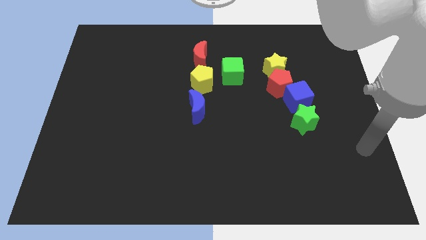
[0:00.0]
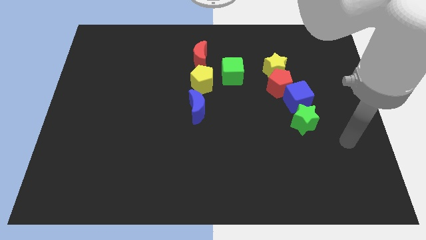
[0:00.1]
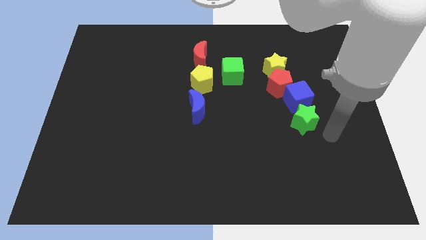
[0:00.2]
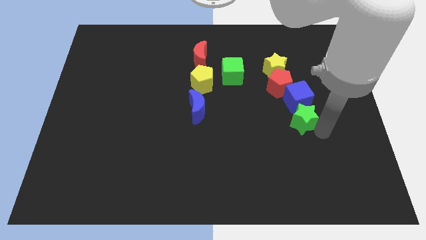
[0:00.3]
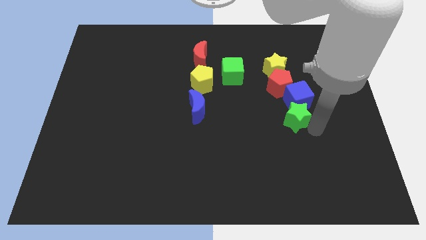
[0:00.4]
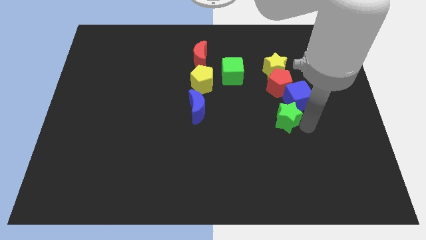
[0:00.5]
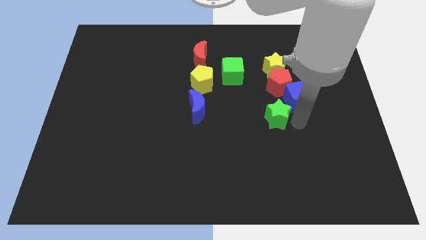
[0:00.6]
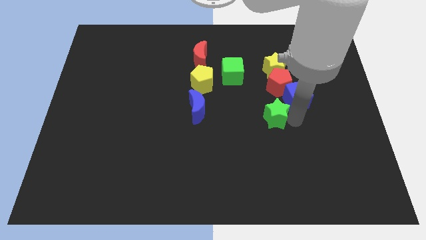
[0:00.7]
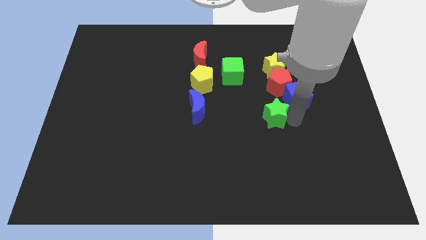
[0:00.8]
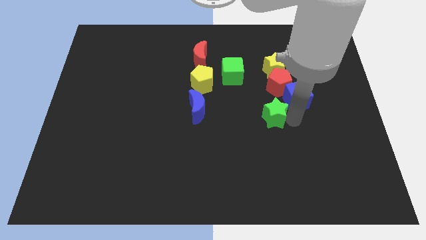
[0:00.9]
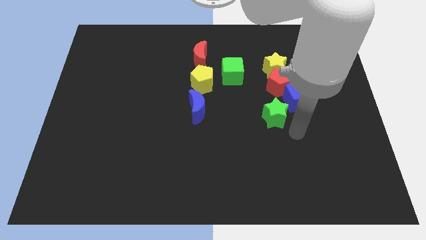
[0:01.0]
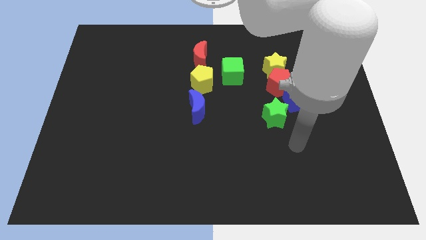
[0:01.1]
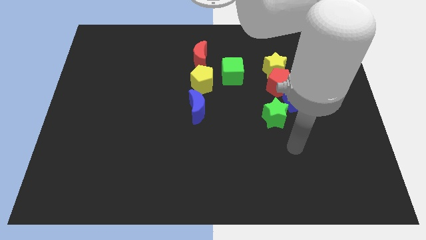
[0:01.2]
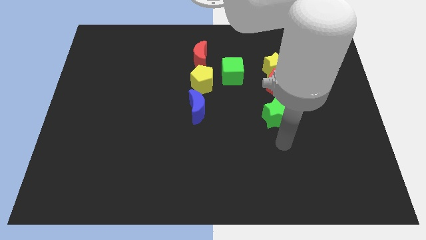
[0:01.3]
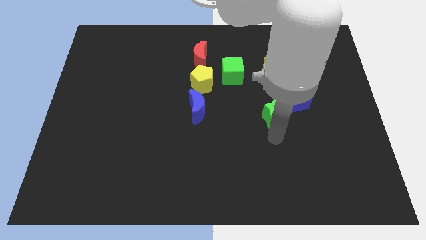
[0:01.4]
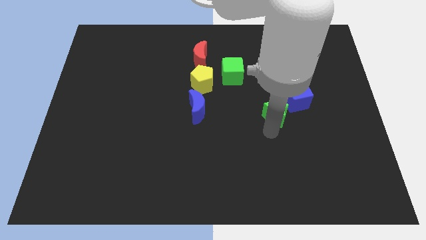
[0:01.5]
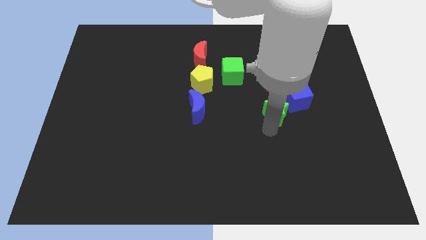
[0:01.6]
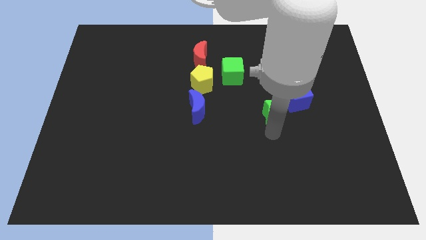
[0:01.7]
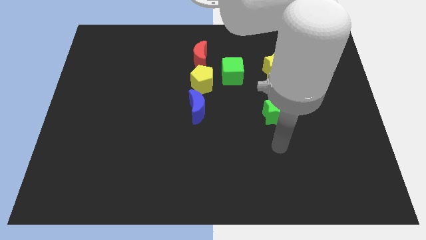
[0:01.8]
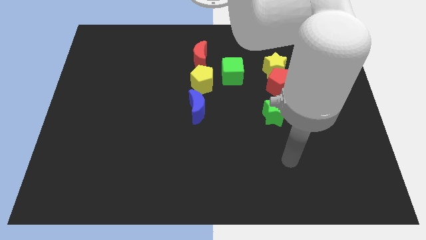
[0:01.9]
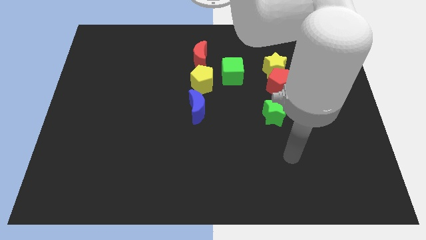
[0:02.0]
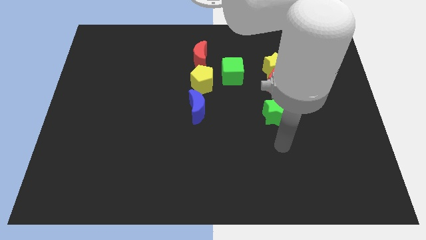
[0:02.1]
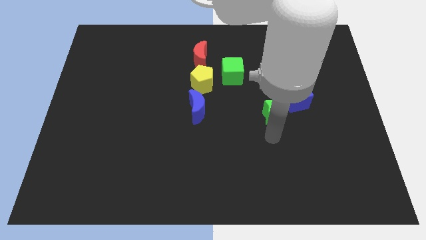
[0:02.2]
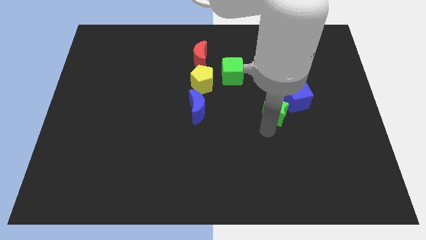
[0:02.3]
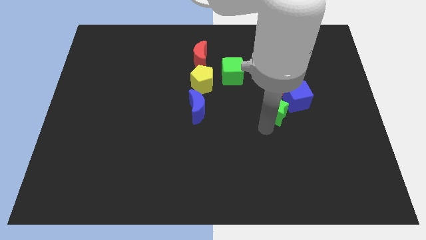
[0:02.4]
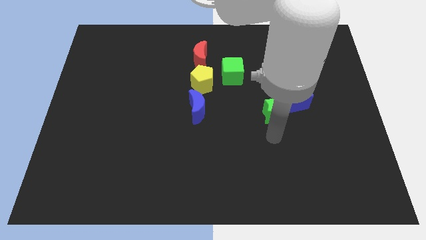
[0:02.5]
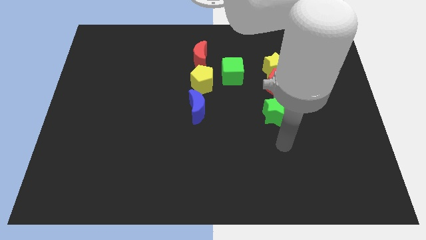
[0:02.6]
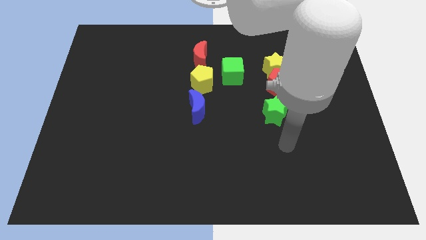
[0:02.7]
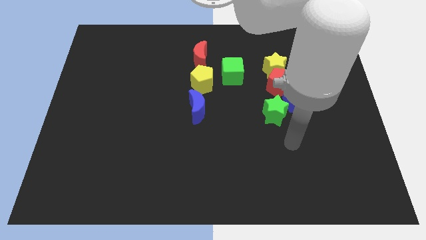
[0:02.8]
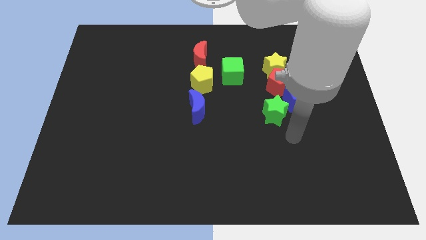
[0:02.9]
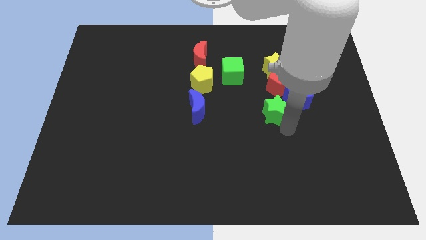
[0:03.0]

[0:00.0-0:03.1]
place the green star left to the blue cube

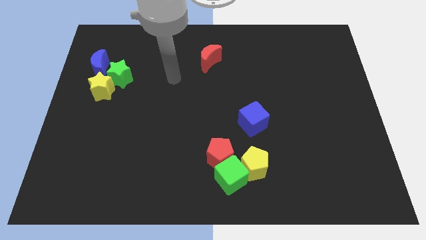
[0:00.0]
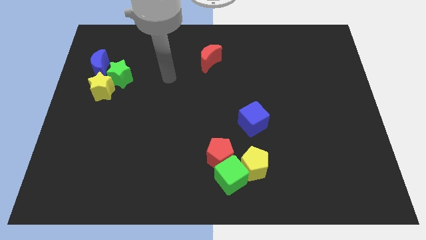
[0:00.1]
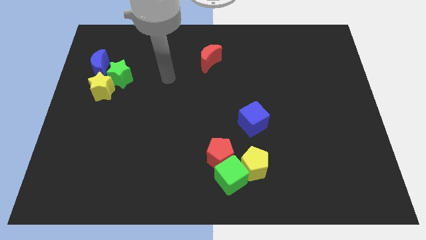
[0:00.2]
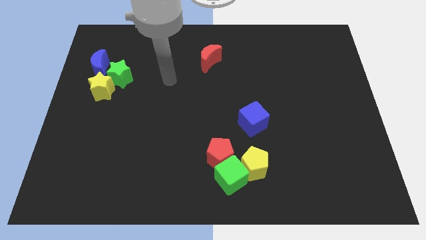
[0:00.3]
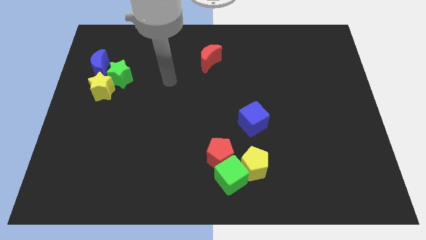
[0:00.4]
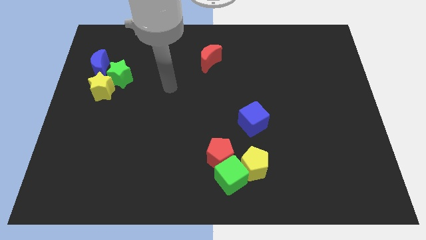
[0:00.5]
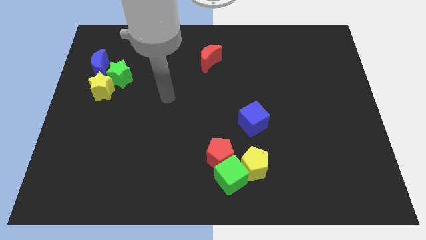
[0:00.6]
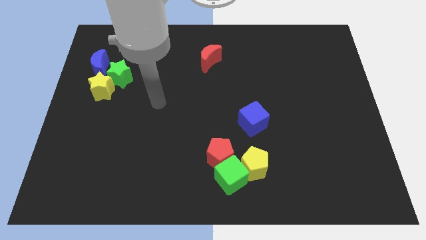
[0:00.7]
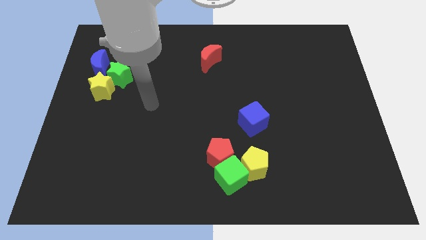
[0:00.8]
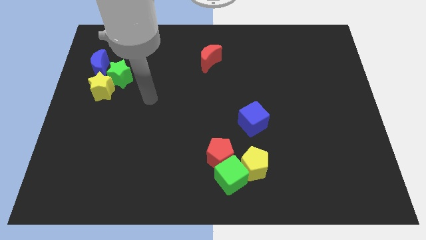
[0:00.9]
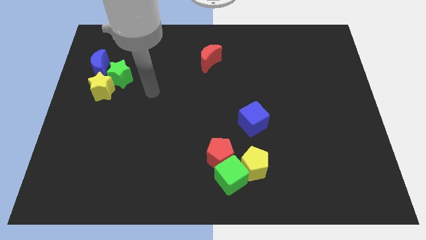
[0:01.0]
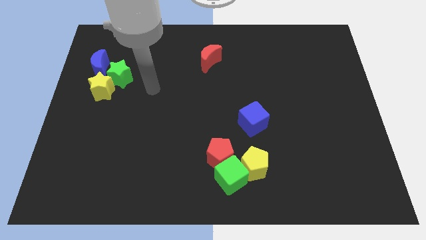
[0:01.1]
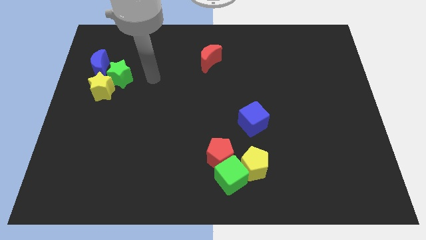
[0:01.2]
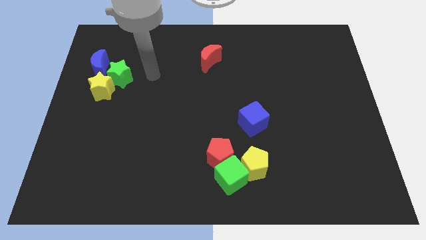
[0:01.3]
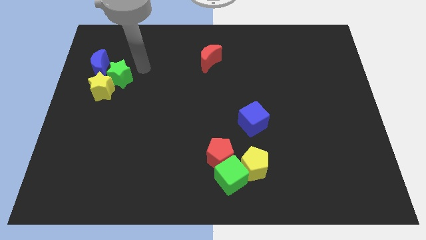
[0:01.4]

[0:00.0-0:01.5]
point the arm in between the green star and the red moon

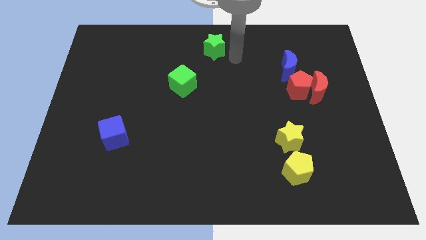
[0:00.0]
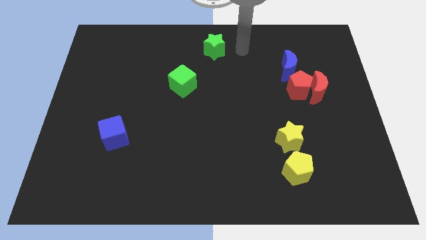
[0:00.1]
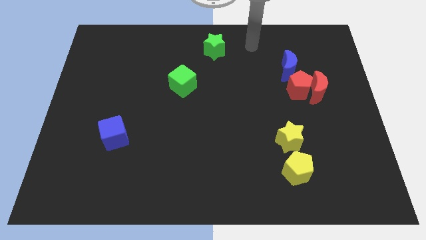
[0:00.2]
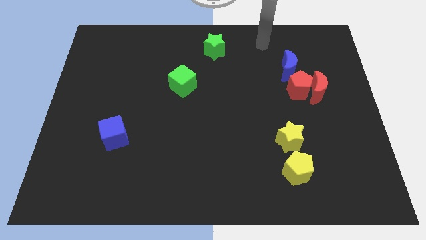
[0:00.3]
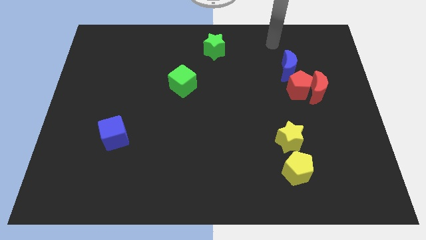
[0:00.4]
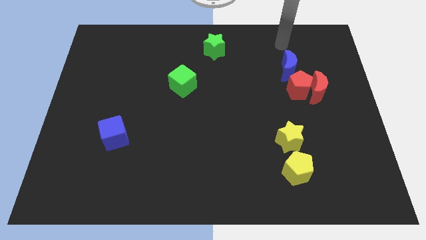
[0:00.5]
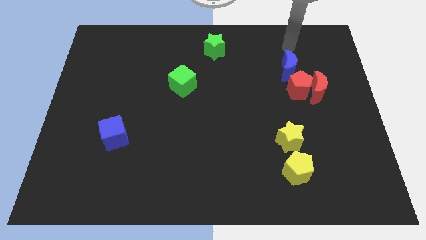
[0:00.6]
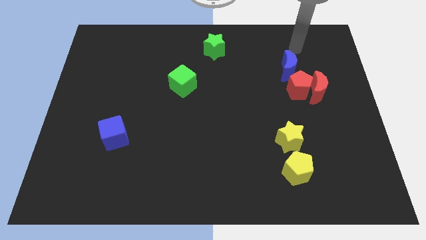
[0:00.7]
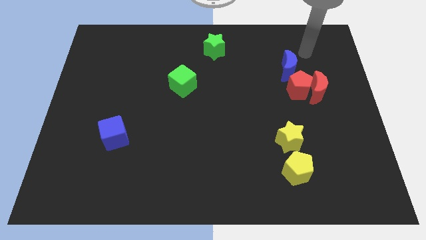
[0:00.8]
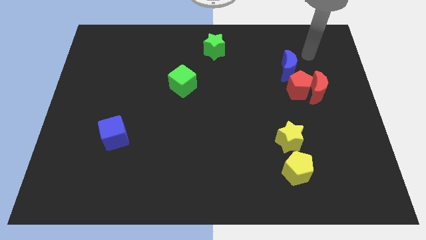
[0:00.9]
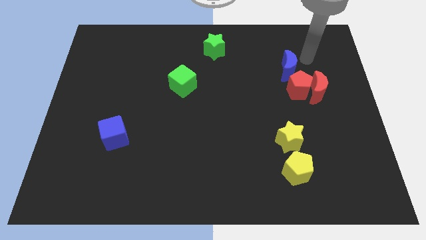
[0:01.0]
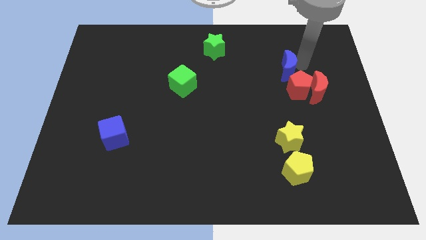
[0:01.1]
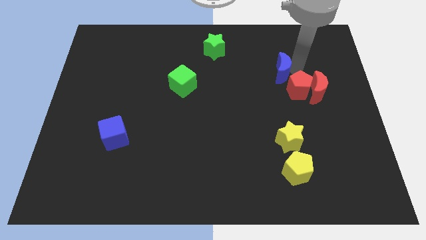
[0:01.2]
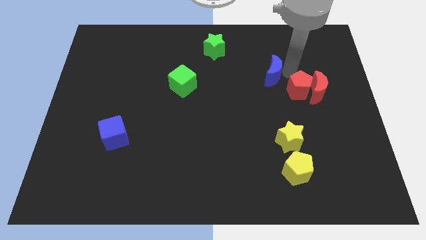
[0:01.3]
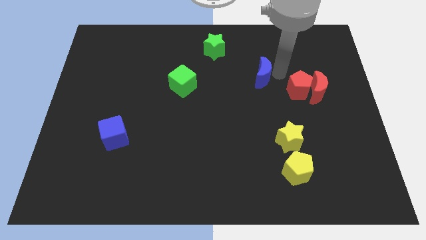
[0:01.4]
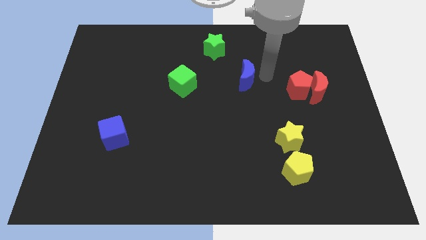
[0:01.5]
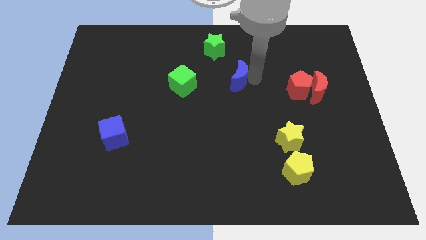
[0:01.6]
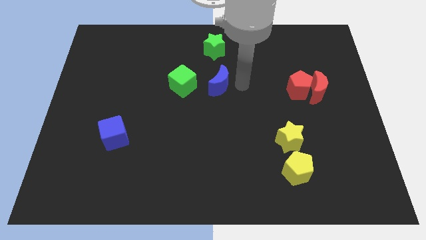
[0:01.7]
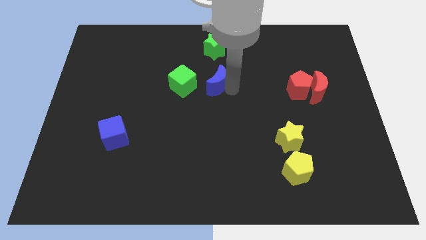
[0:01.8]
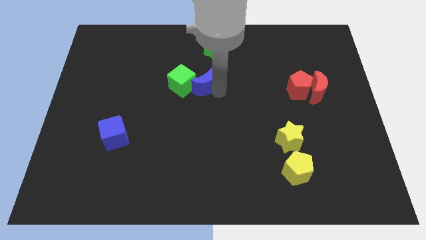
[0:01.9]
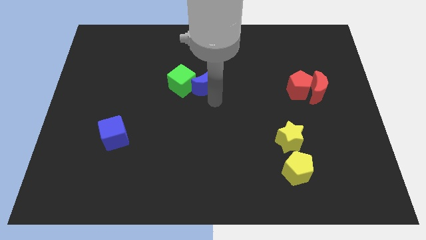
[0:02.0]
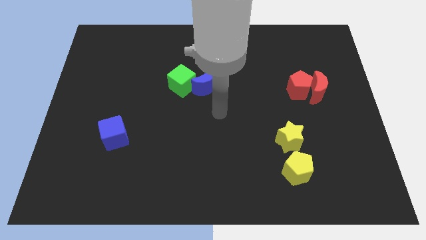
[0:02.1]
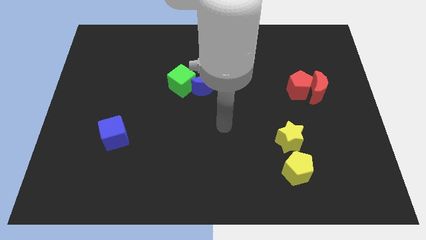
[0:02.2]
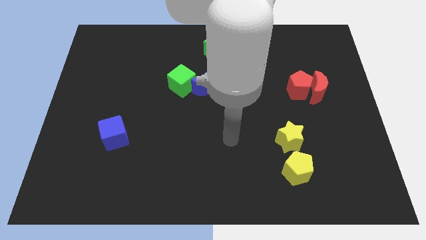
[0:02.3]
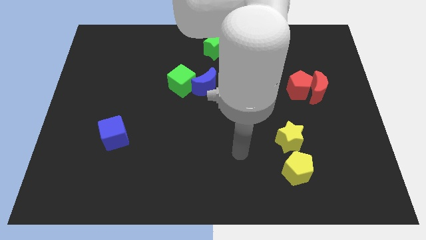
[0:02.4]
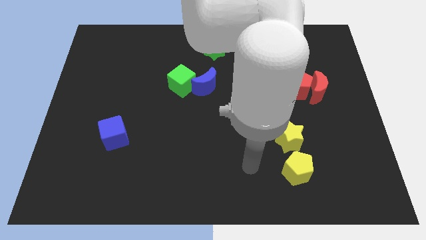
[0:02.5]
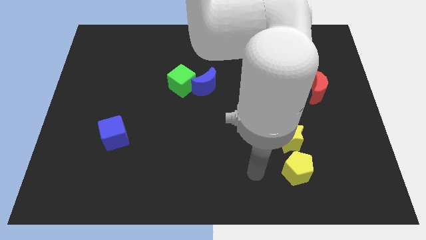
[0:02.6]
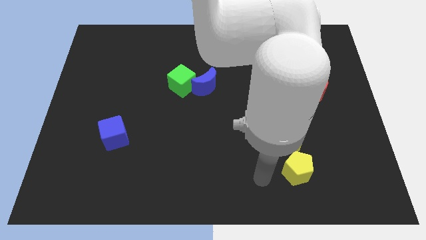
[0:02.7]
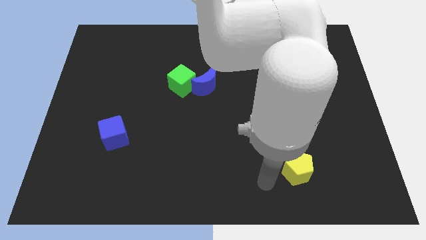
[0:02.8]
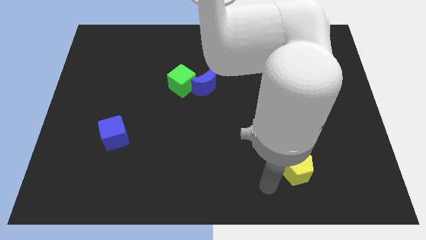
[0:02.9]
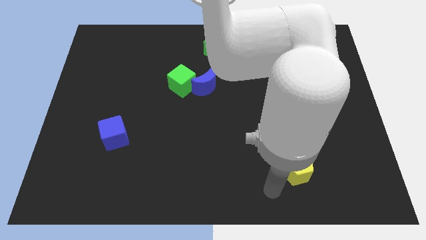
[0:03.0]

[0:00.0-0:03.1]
push the blue moon close to the green cube

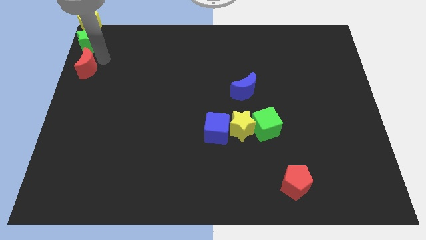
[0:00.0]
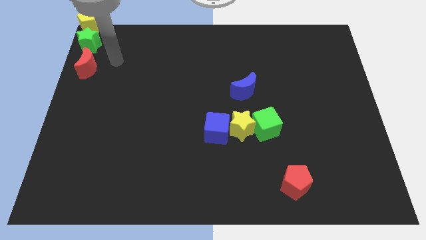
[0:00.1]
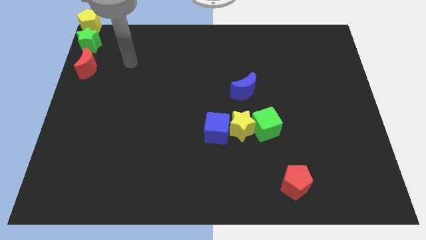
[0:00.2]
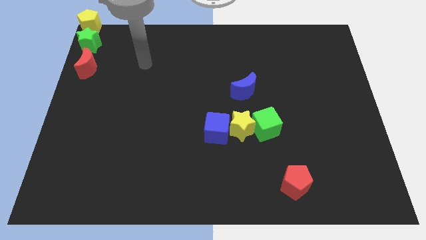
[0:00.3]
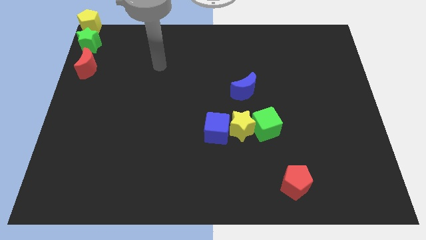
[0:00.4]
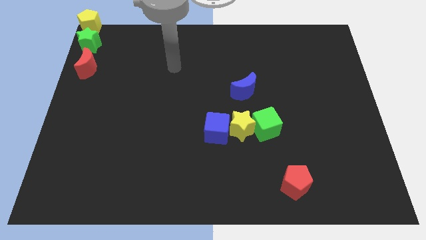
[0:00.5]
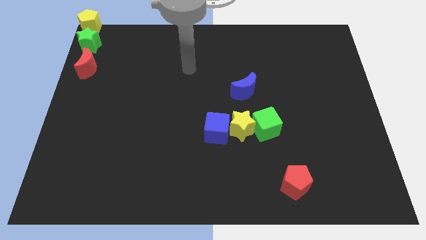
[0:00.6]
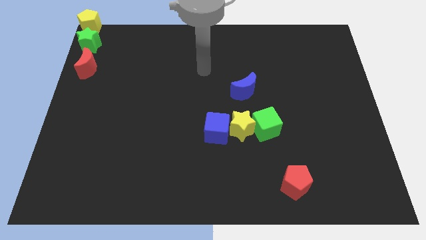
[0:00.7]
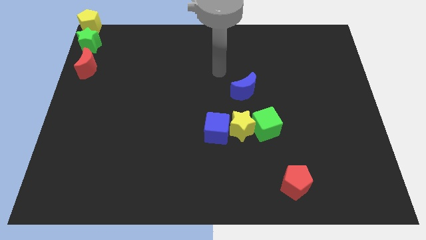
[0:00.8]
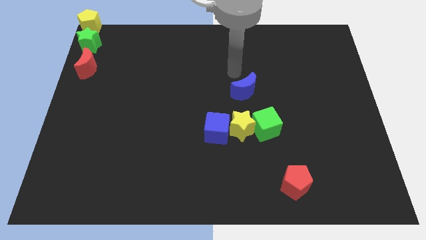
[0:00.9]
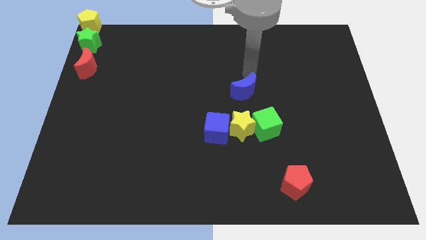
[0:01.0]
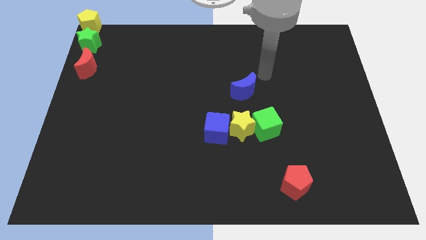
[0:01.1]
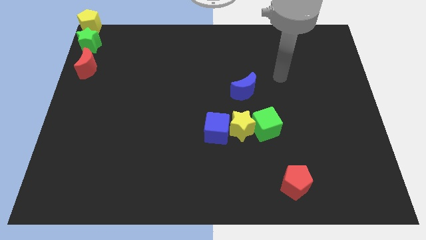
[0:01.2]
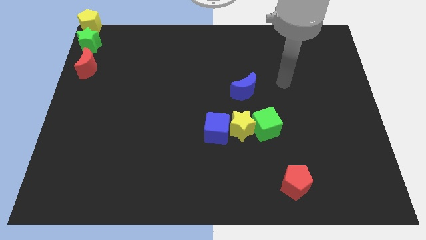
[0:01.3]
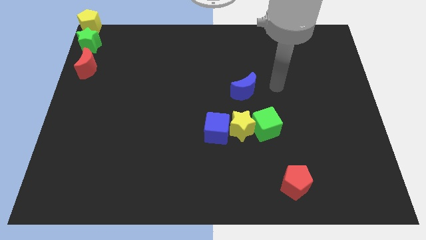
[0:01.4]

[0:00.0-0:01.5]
slide your arm away from the red moon
